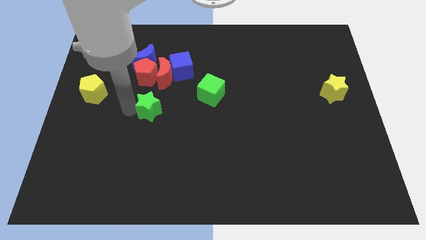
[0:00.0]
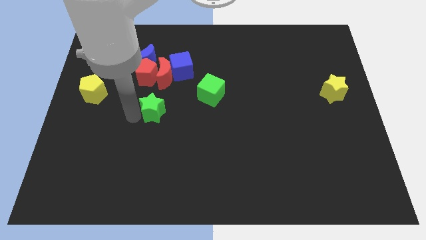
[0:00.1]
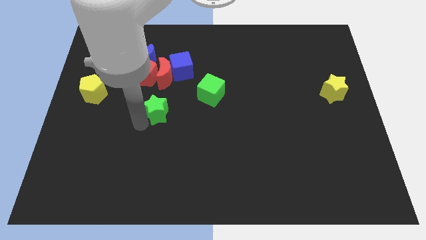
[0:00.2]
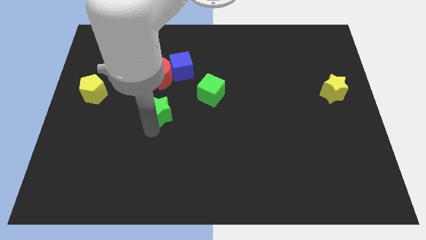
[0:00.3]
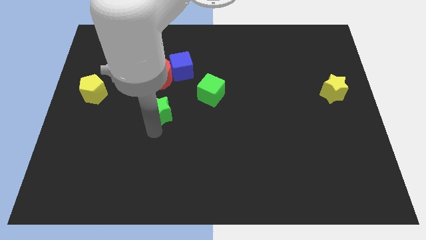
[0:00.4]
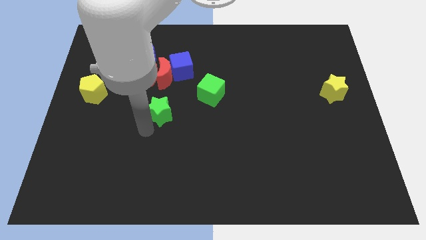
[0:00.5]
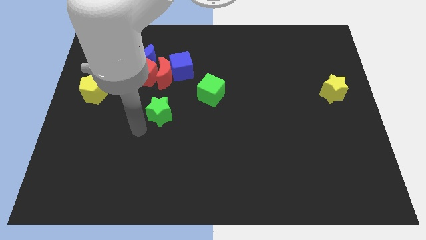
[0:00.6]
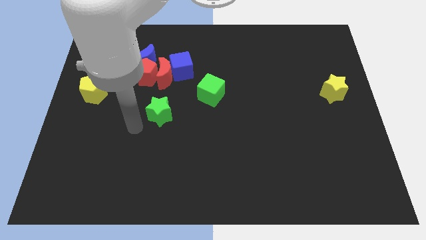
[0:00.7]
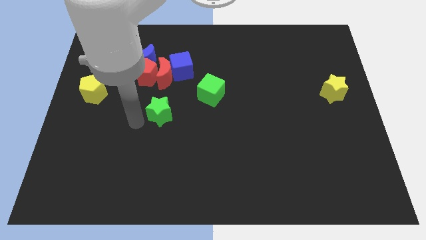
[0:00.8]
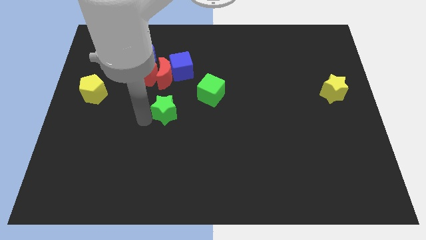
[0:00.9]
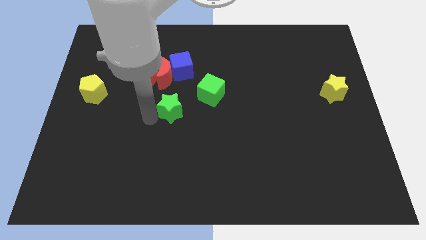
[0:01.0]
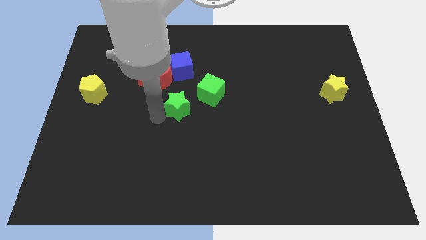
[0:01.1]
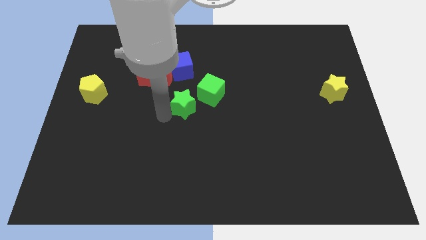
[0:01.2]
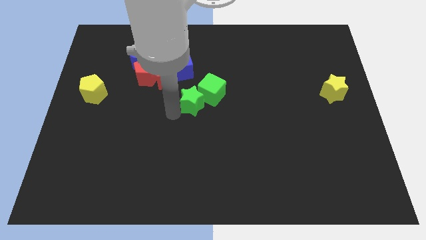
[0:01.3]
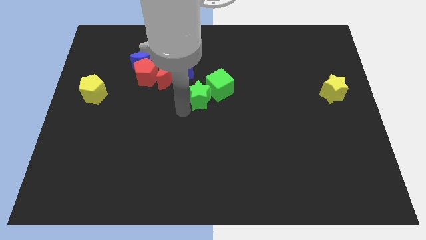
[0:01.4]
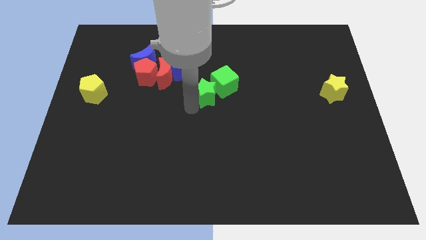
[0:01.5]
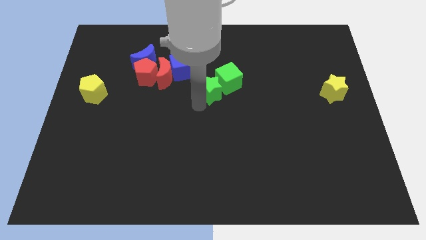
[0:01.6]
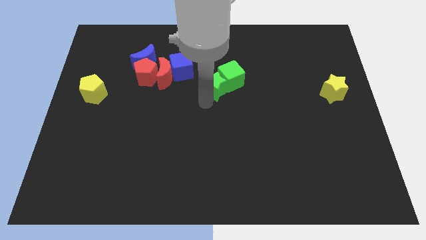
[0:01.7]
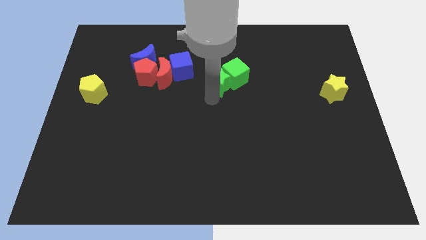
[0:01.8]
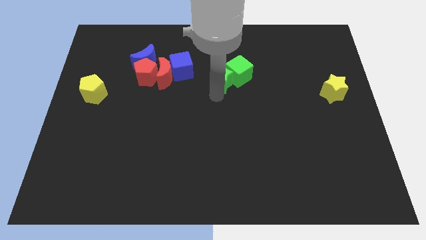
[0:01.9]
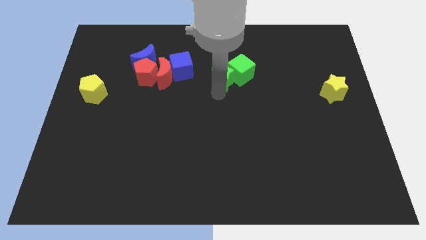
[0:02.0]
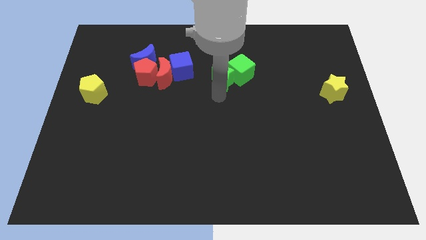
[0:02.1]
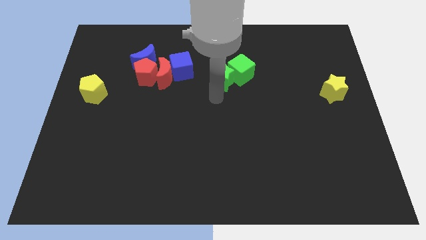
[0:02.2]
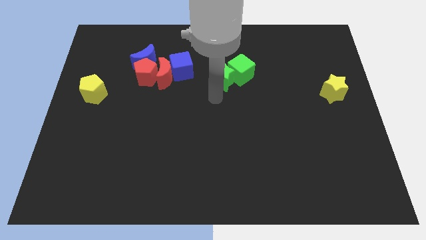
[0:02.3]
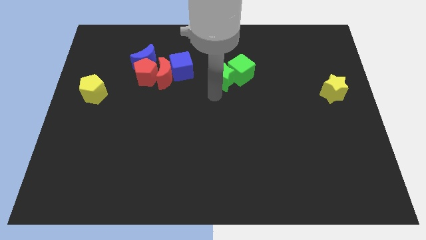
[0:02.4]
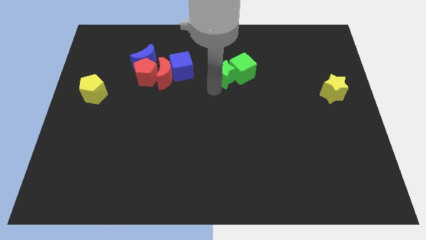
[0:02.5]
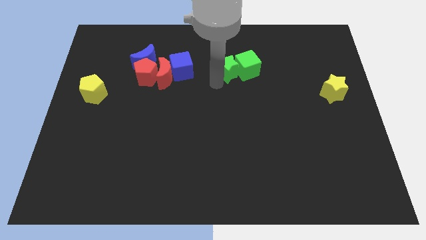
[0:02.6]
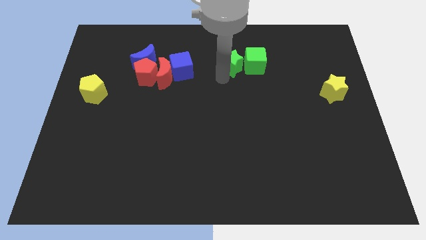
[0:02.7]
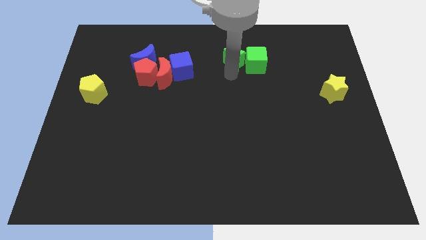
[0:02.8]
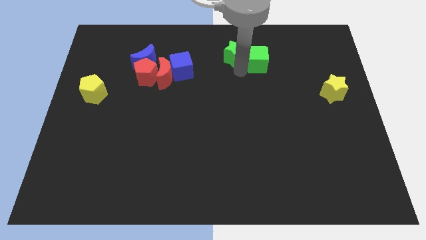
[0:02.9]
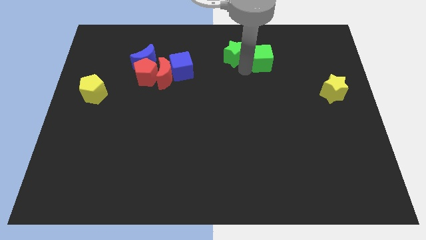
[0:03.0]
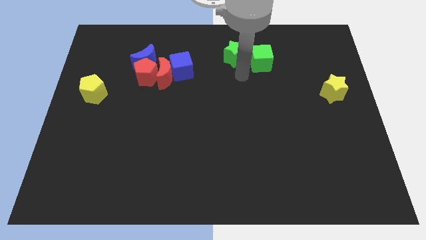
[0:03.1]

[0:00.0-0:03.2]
push the green blocks to the top side of the table

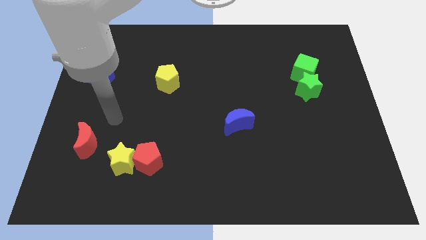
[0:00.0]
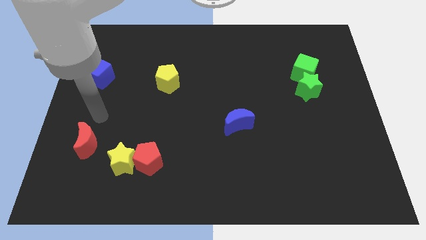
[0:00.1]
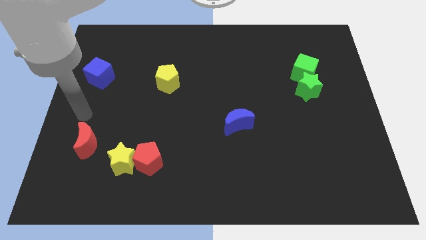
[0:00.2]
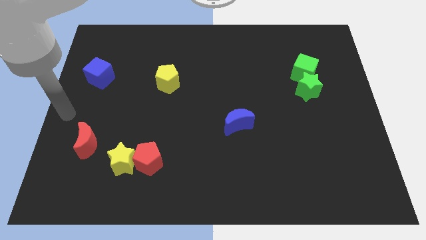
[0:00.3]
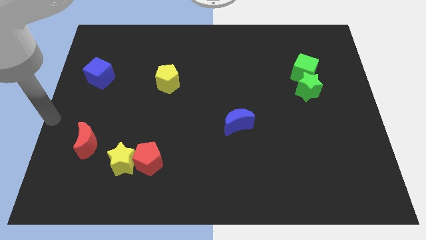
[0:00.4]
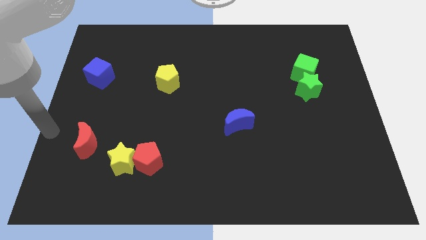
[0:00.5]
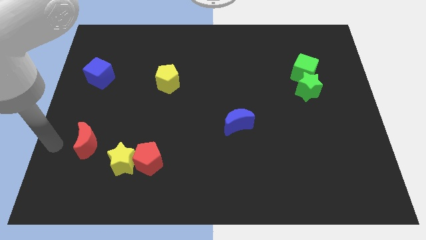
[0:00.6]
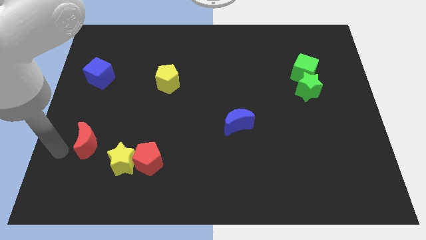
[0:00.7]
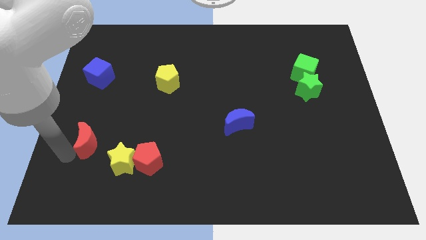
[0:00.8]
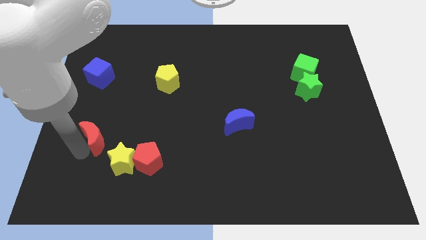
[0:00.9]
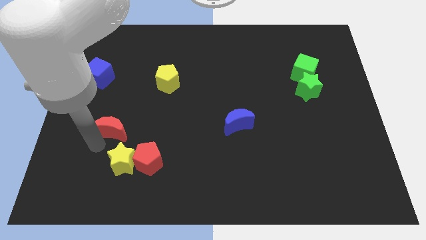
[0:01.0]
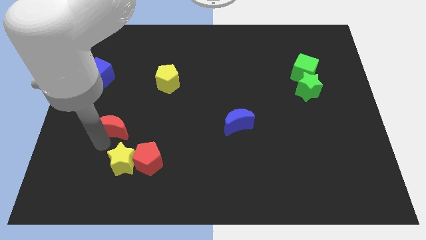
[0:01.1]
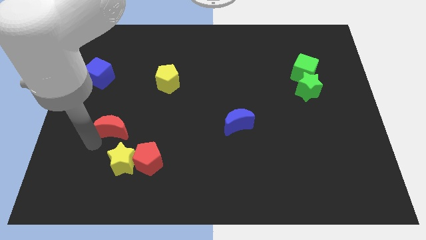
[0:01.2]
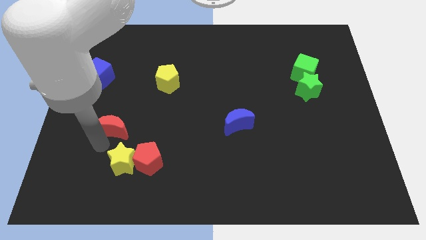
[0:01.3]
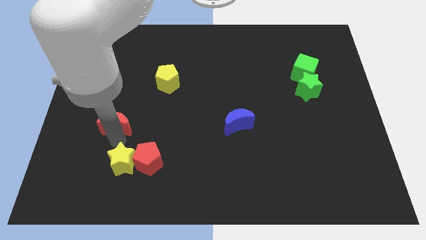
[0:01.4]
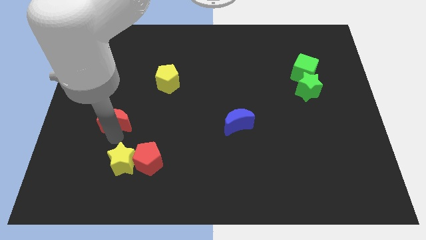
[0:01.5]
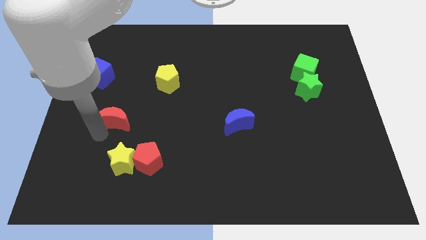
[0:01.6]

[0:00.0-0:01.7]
push the red crescent upwards

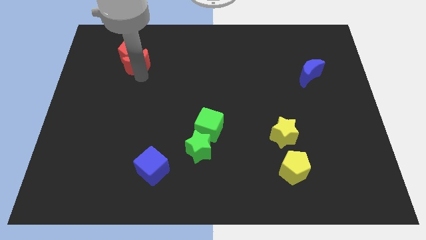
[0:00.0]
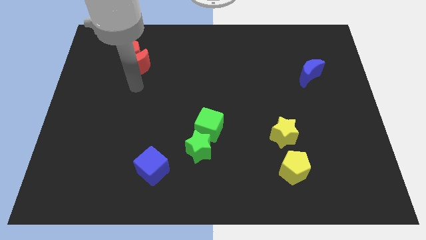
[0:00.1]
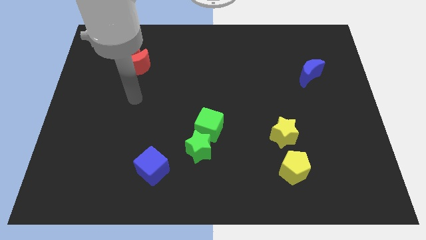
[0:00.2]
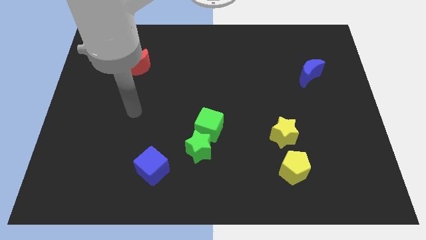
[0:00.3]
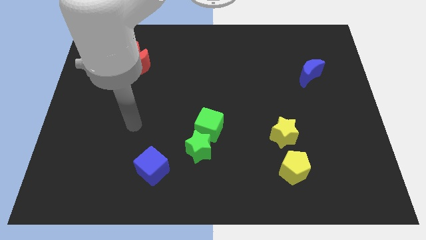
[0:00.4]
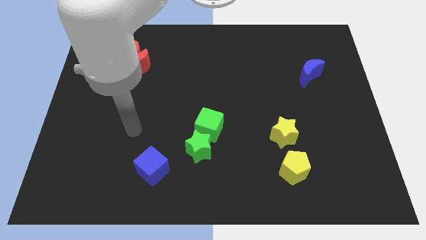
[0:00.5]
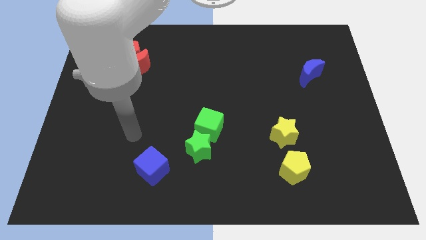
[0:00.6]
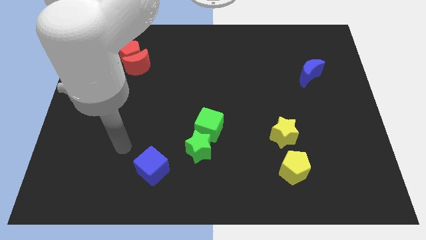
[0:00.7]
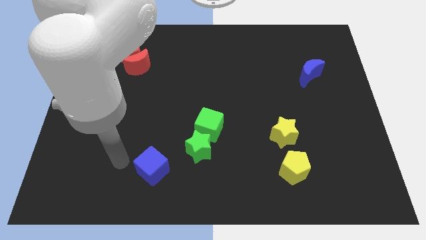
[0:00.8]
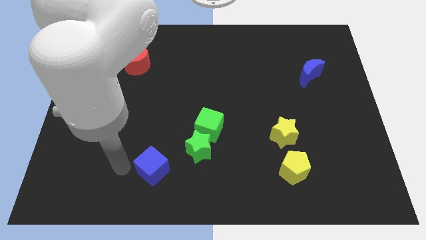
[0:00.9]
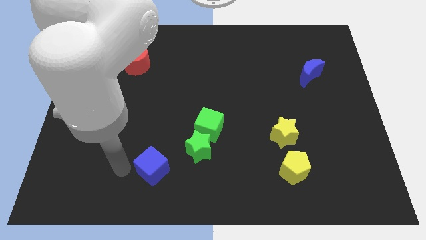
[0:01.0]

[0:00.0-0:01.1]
go away from the red moon

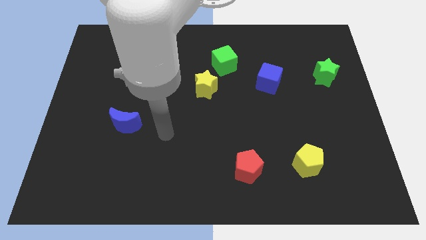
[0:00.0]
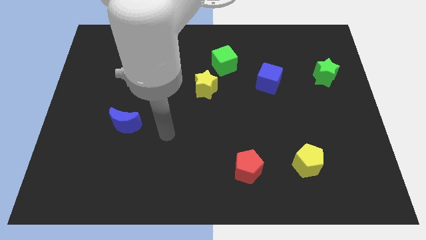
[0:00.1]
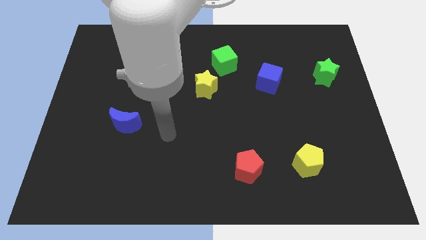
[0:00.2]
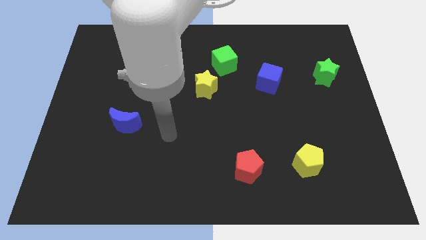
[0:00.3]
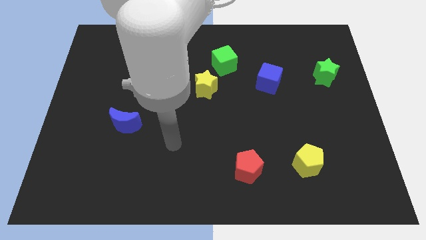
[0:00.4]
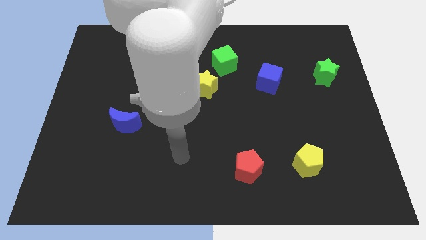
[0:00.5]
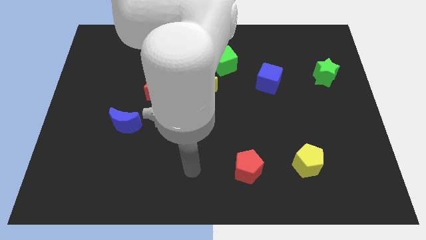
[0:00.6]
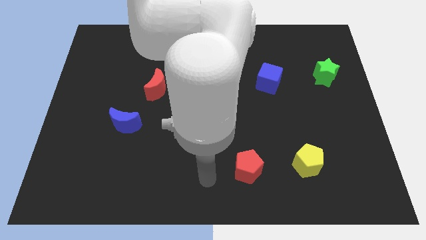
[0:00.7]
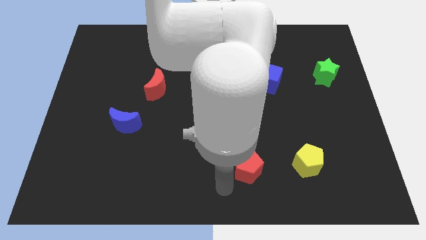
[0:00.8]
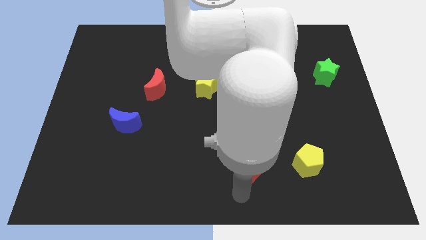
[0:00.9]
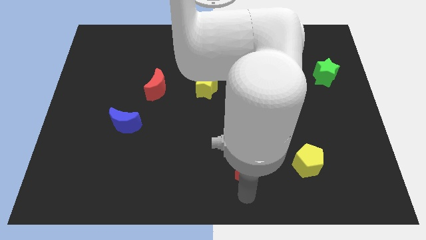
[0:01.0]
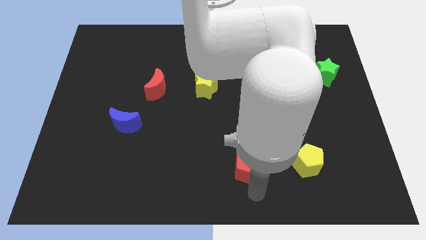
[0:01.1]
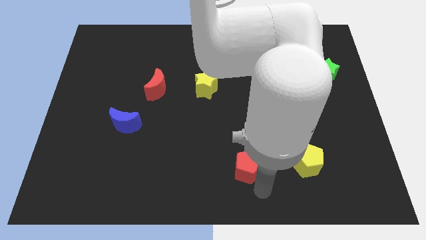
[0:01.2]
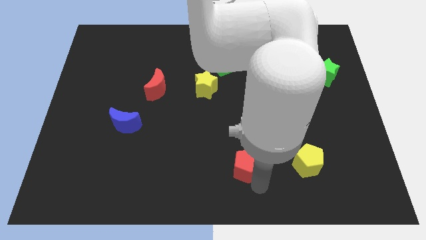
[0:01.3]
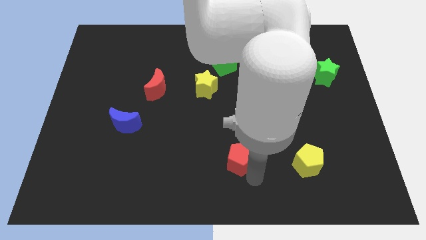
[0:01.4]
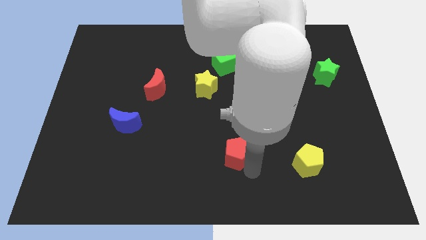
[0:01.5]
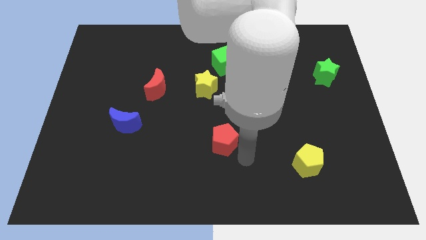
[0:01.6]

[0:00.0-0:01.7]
push the red pentagon slightly to the top

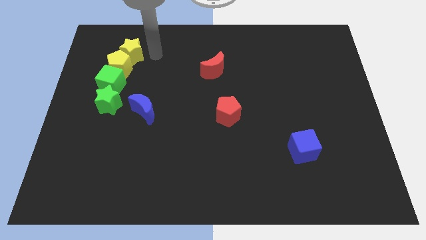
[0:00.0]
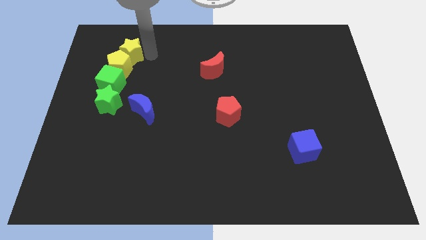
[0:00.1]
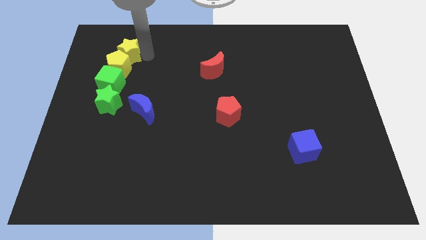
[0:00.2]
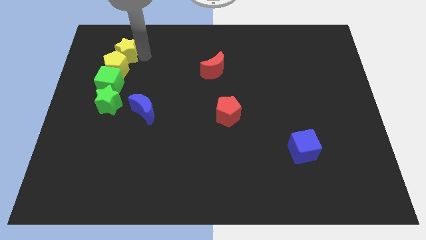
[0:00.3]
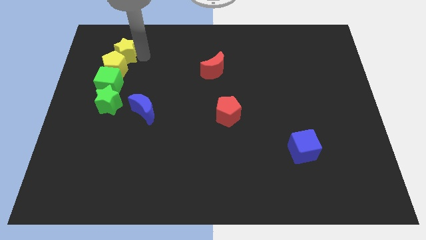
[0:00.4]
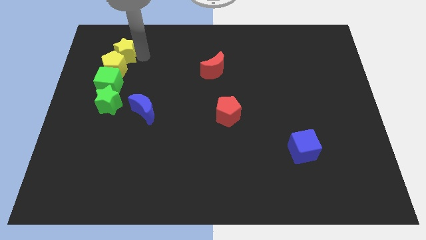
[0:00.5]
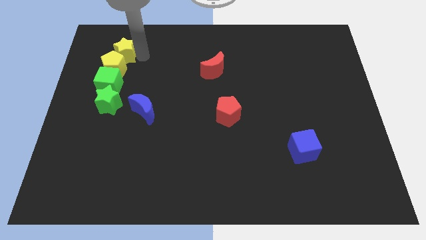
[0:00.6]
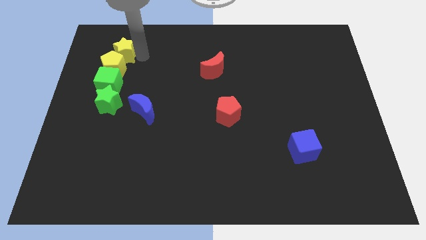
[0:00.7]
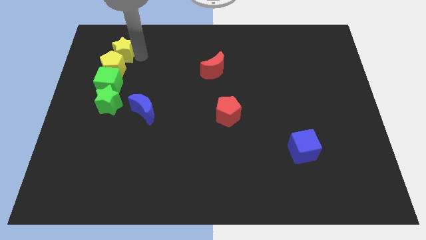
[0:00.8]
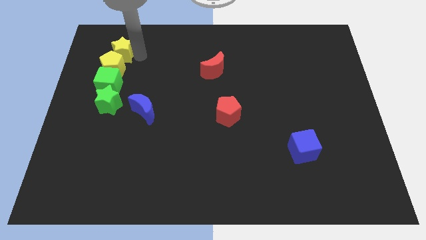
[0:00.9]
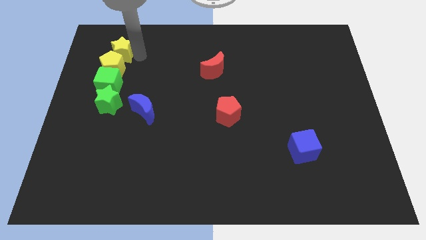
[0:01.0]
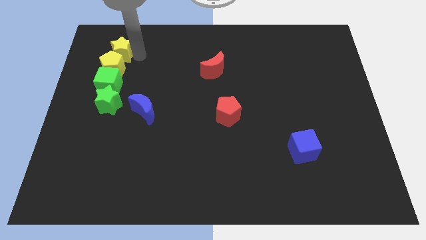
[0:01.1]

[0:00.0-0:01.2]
adjust yellow star above yellow pentagon

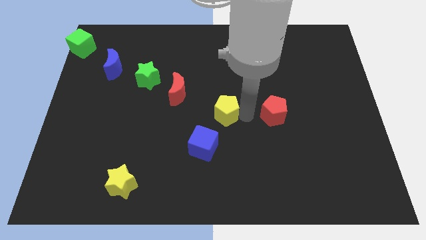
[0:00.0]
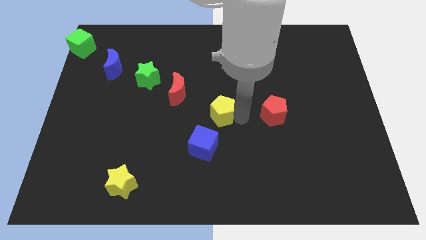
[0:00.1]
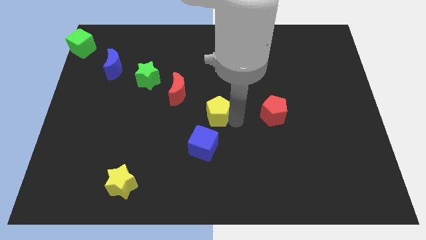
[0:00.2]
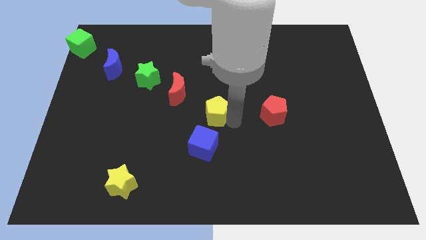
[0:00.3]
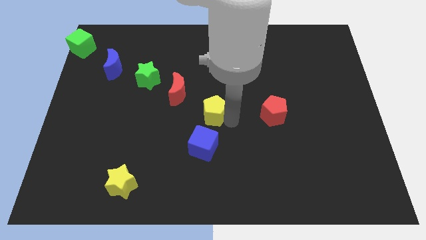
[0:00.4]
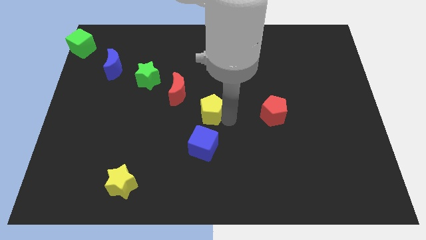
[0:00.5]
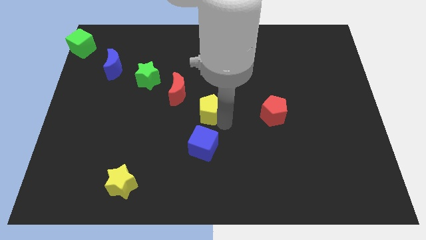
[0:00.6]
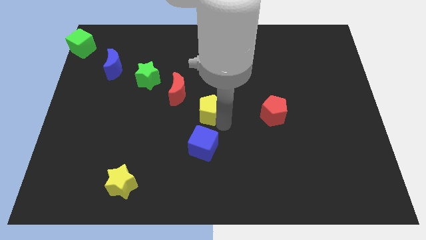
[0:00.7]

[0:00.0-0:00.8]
push yellow pentagon below red crescent
